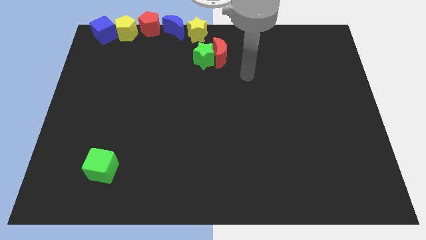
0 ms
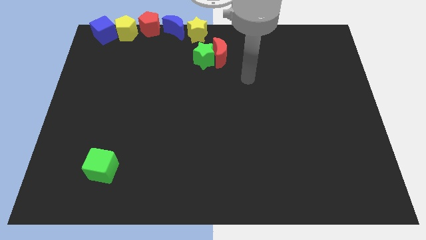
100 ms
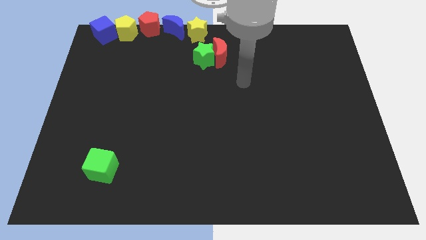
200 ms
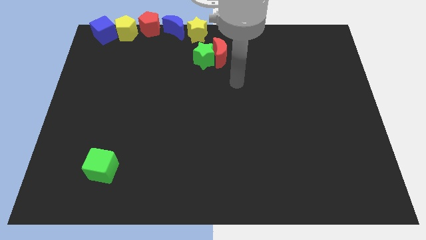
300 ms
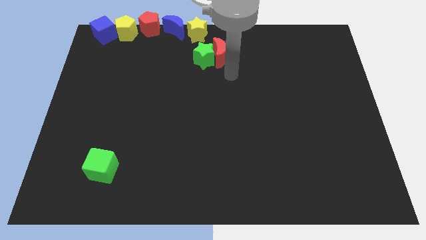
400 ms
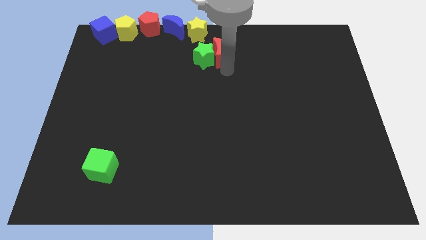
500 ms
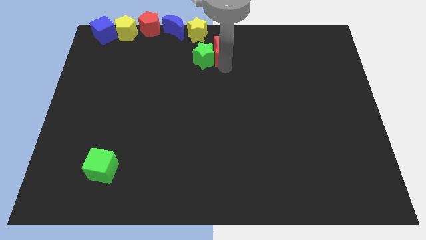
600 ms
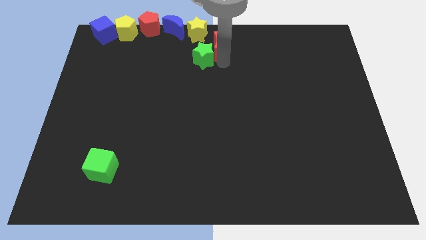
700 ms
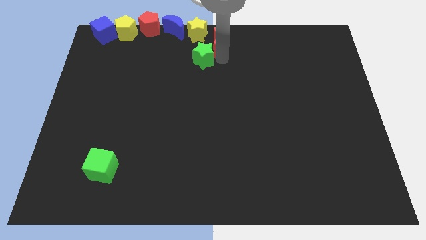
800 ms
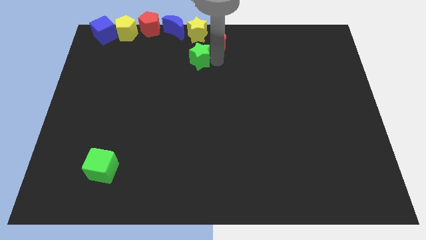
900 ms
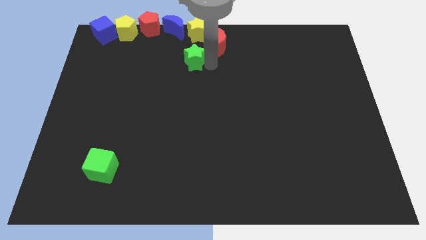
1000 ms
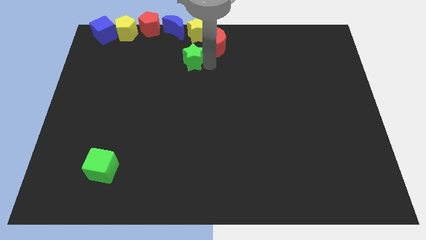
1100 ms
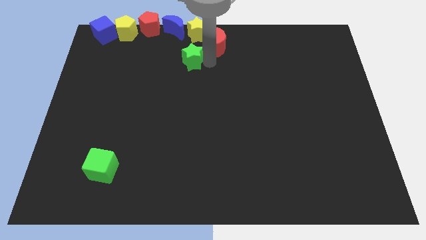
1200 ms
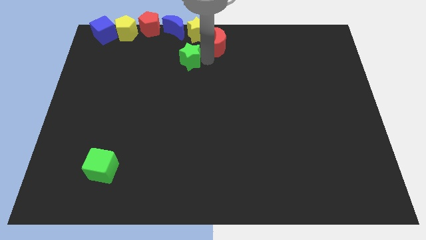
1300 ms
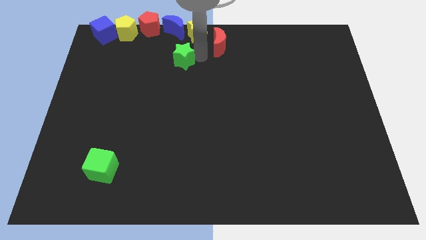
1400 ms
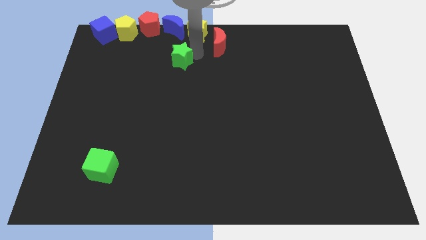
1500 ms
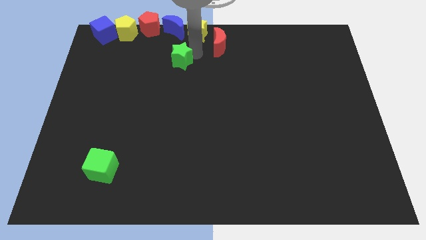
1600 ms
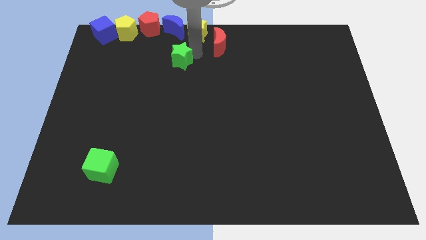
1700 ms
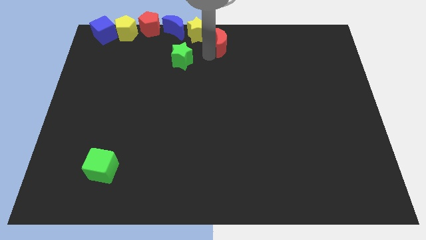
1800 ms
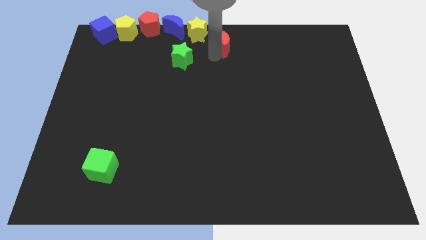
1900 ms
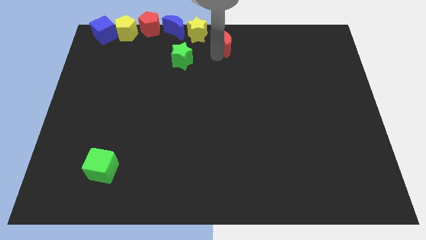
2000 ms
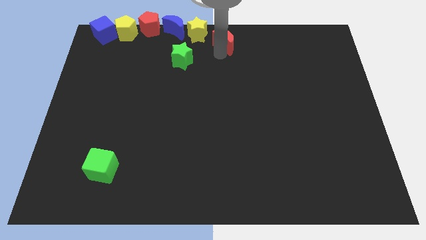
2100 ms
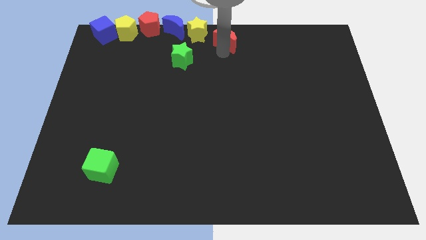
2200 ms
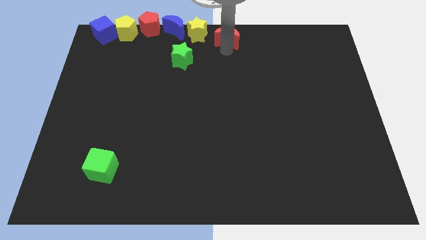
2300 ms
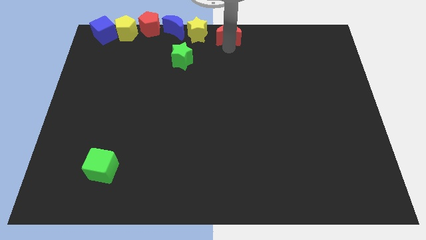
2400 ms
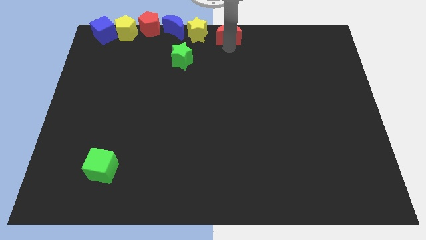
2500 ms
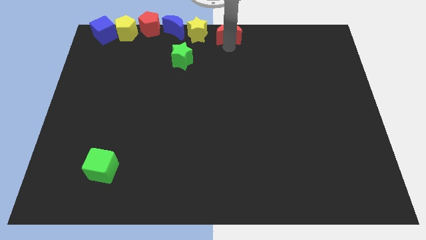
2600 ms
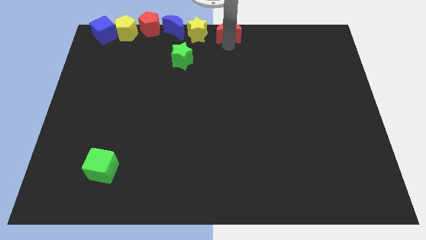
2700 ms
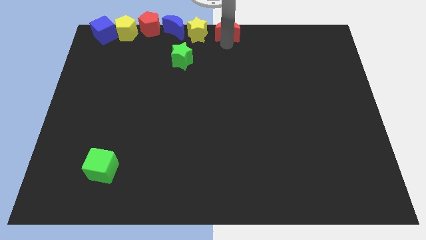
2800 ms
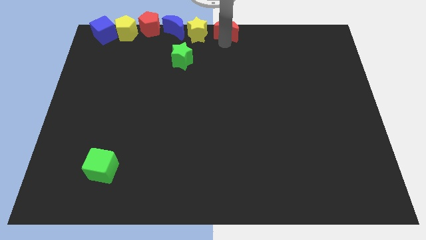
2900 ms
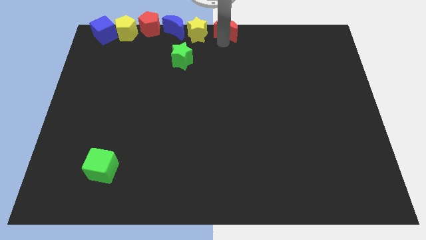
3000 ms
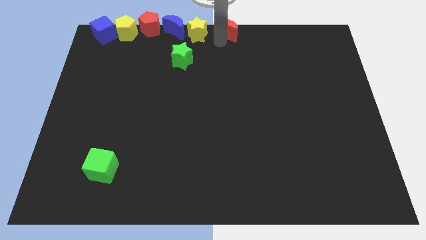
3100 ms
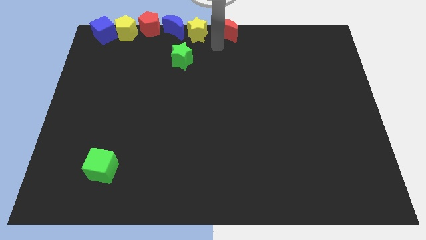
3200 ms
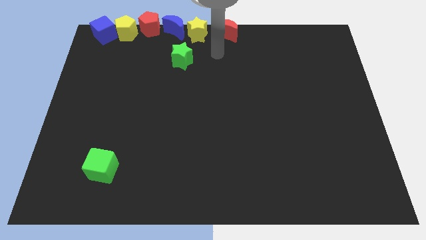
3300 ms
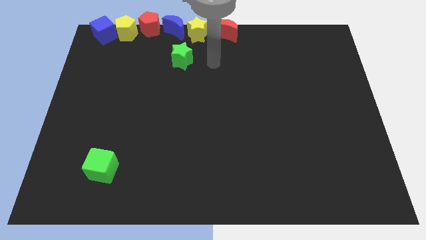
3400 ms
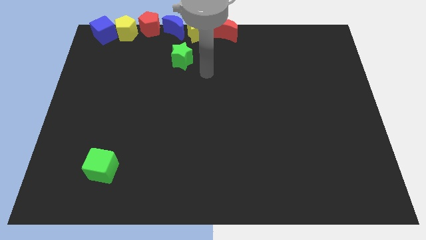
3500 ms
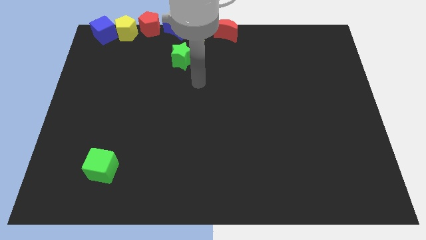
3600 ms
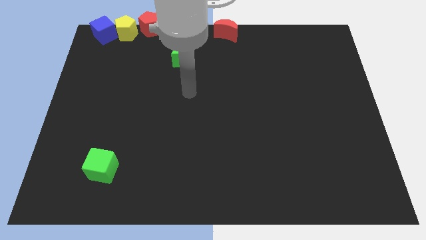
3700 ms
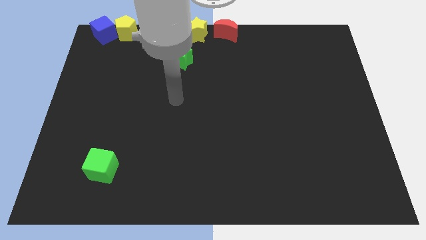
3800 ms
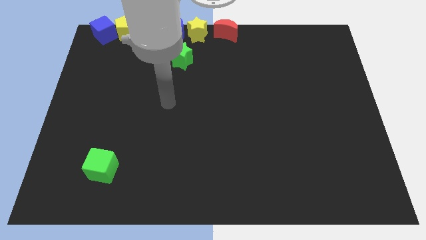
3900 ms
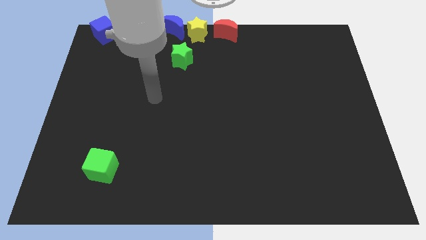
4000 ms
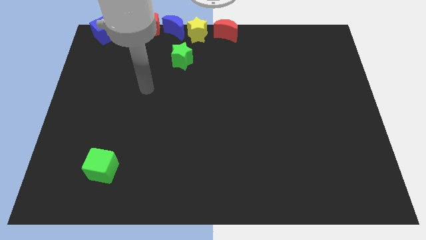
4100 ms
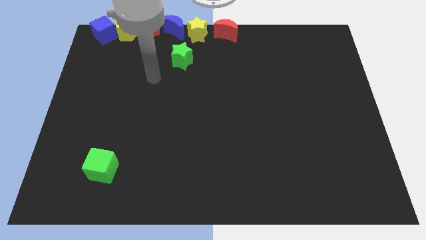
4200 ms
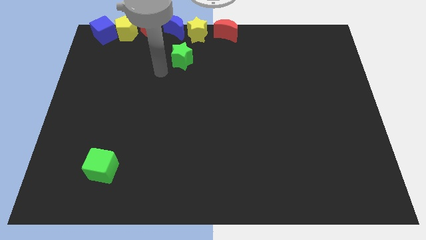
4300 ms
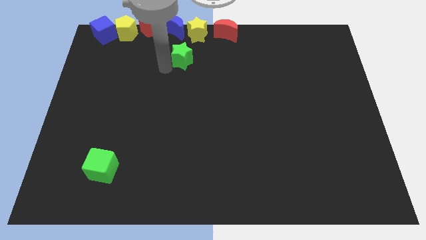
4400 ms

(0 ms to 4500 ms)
push the red crescent to the right of the yellow star

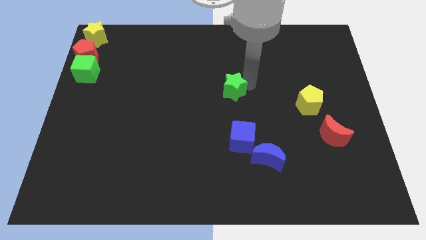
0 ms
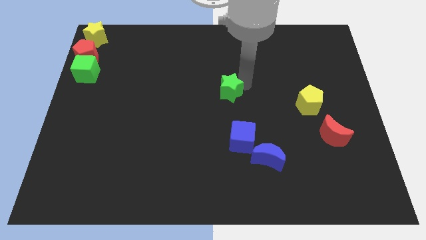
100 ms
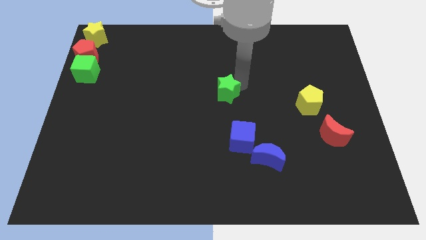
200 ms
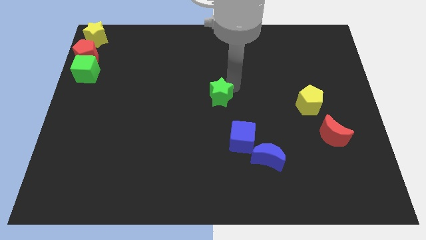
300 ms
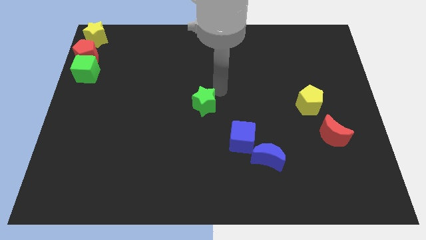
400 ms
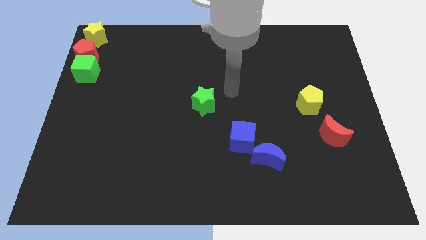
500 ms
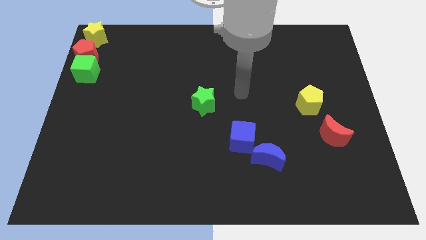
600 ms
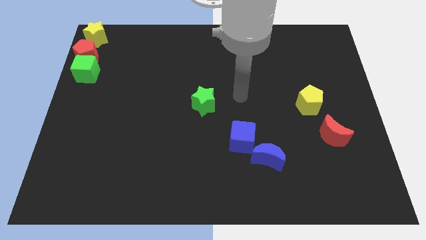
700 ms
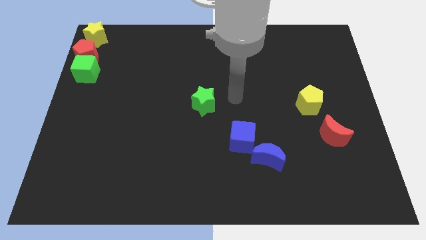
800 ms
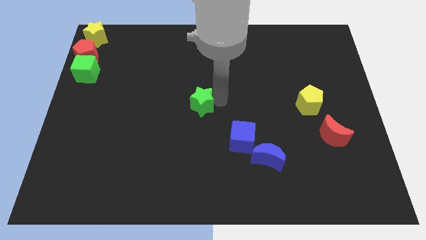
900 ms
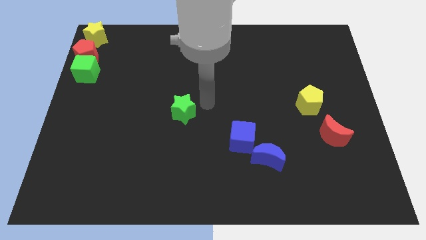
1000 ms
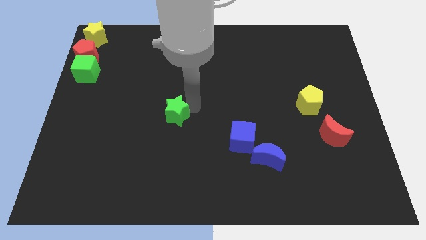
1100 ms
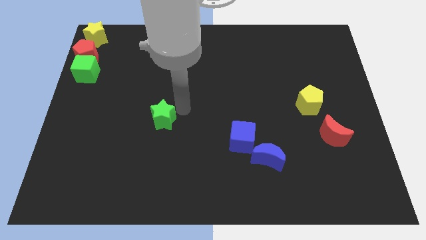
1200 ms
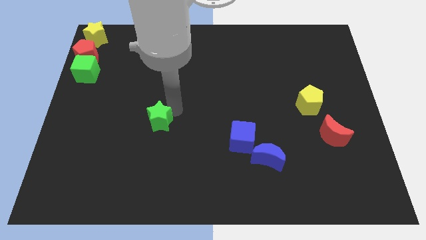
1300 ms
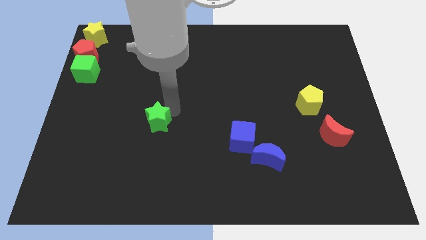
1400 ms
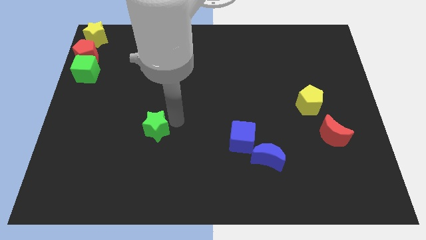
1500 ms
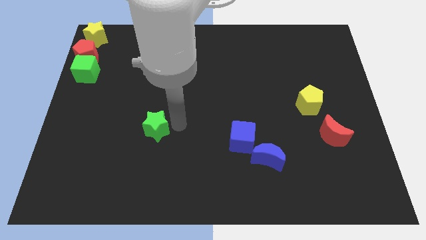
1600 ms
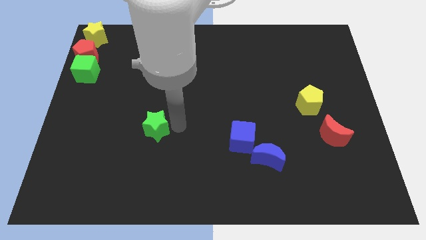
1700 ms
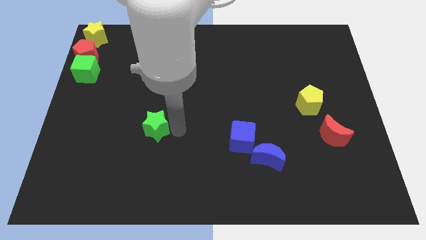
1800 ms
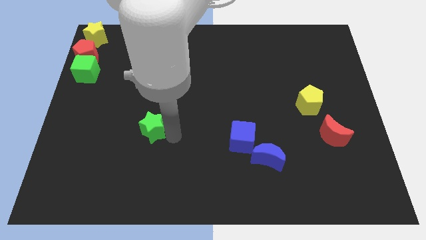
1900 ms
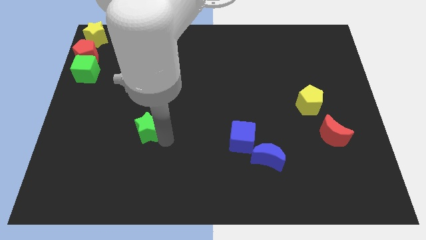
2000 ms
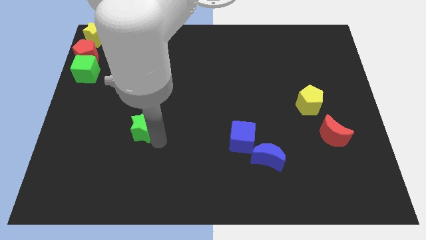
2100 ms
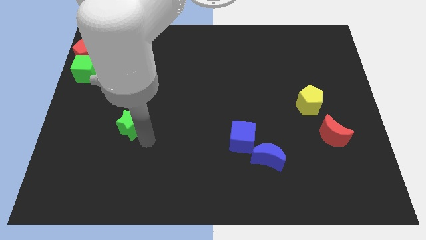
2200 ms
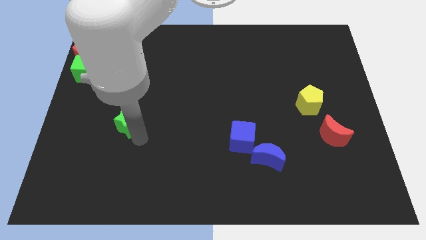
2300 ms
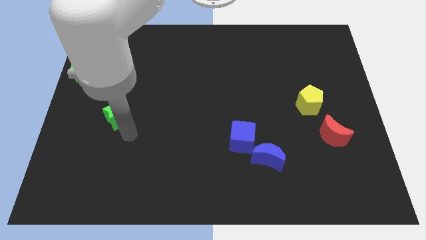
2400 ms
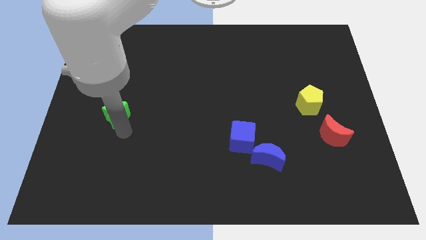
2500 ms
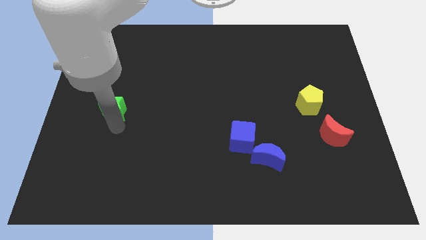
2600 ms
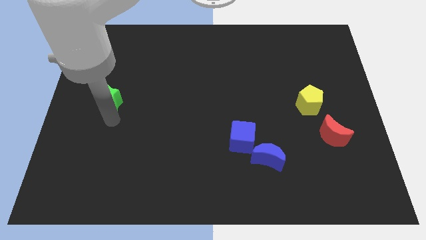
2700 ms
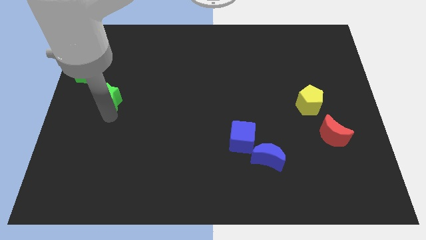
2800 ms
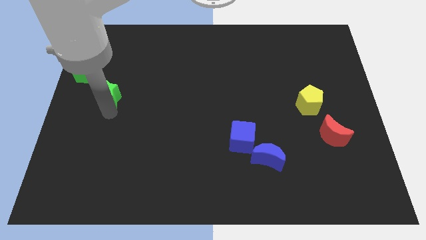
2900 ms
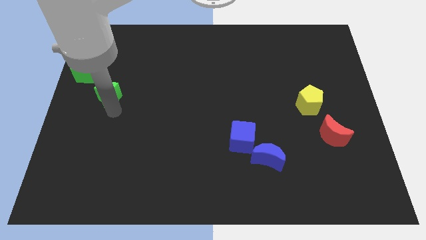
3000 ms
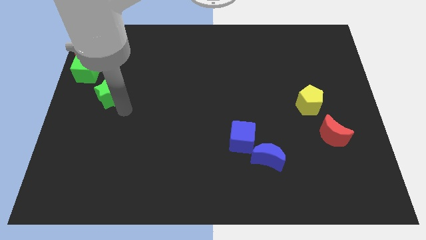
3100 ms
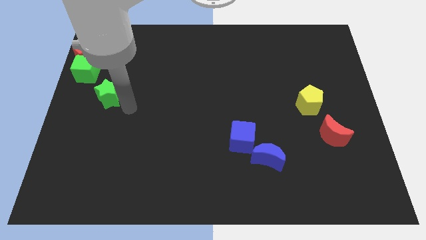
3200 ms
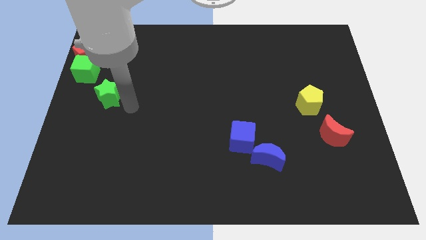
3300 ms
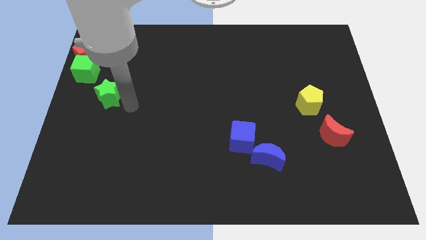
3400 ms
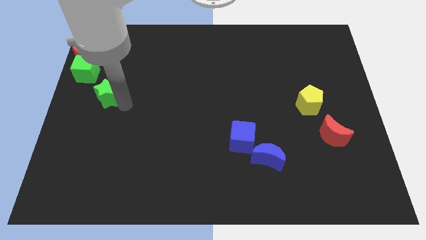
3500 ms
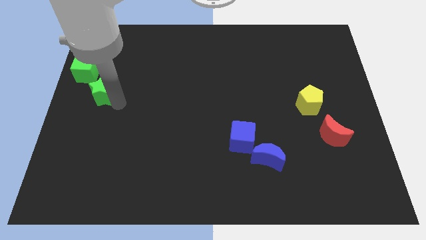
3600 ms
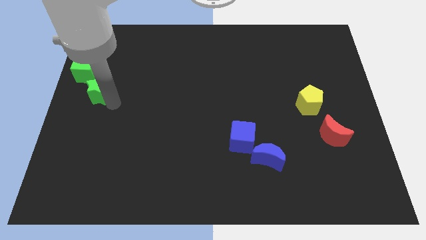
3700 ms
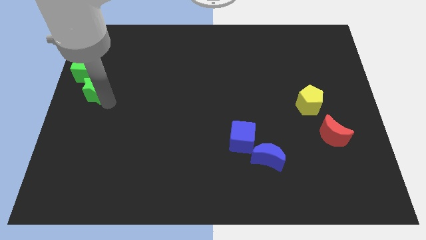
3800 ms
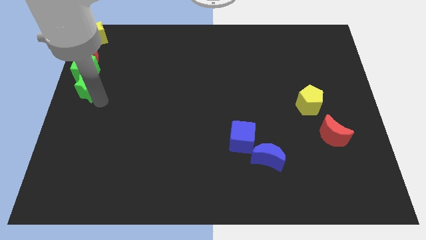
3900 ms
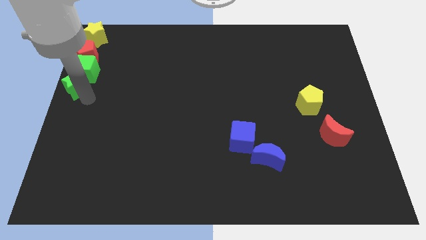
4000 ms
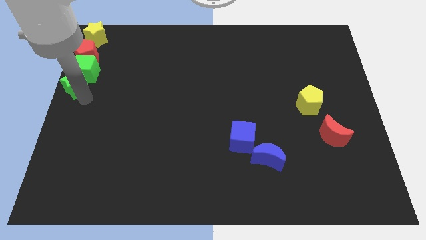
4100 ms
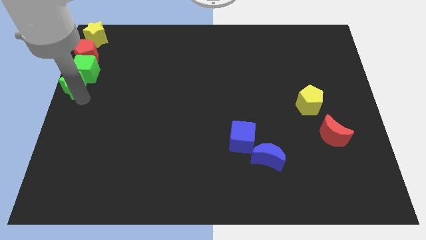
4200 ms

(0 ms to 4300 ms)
place the green star below the green cube

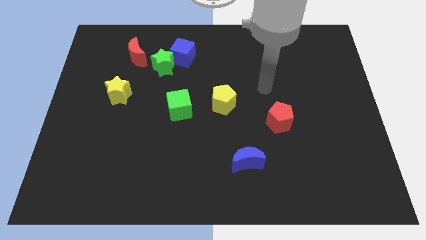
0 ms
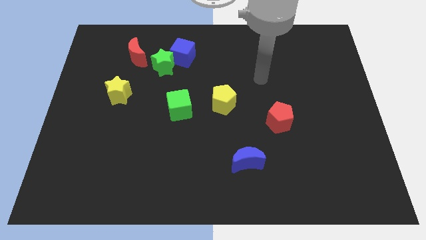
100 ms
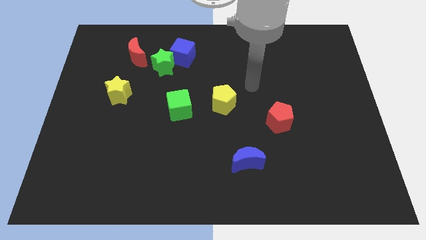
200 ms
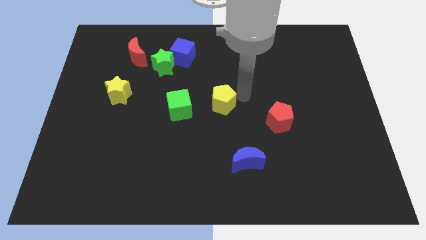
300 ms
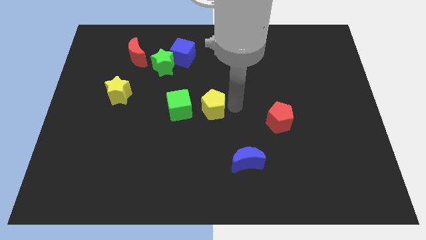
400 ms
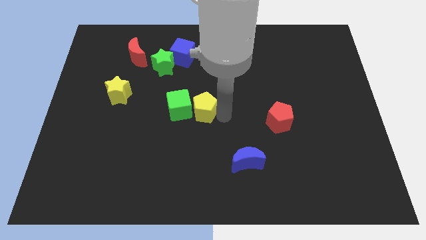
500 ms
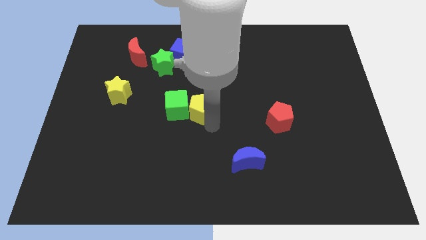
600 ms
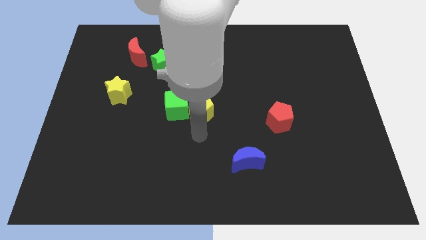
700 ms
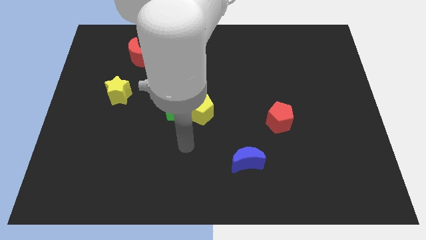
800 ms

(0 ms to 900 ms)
push yellow pentagon in to green cube
